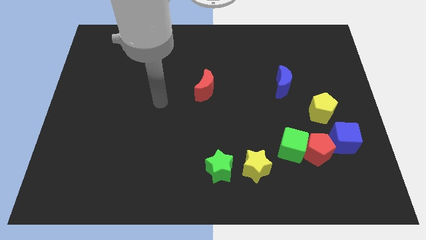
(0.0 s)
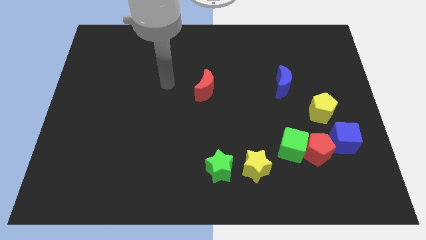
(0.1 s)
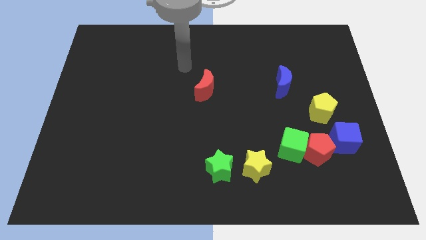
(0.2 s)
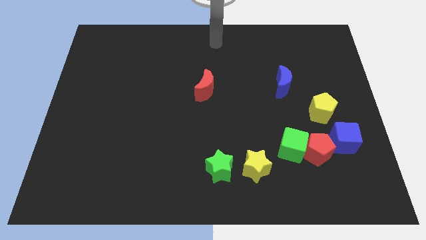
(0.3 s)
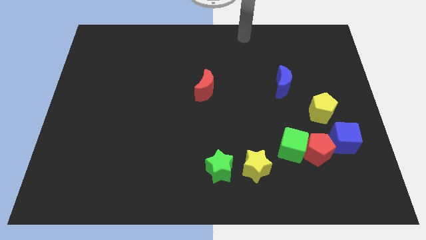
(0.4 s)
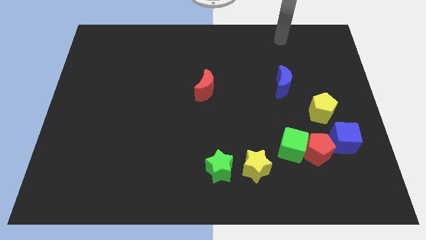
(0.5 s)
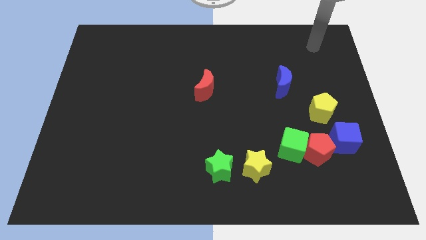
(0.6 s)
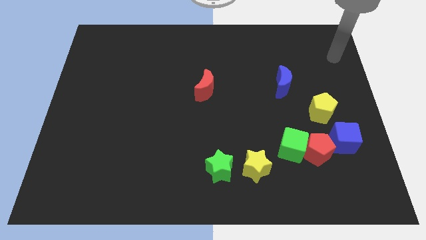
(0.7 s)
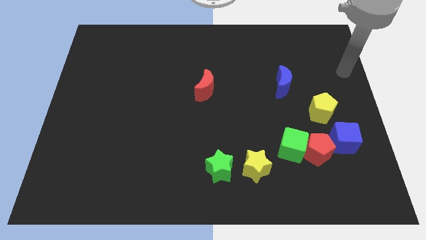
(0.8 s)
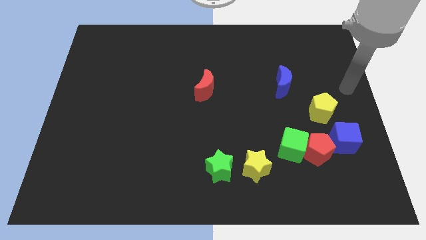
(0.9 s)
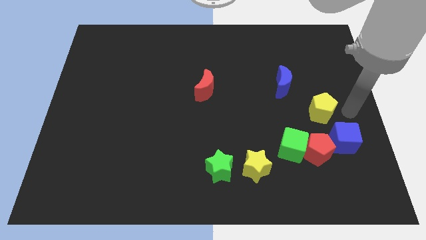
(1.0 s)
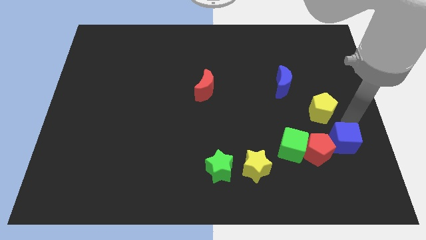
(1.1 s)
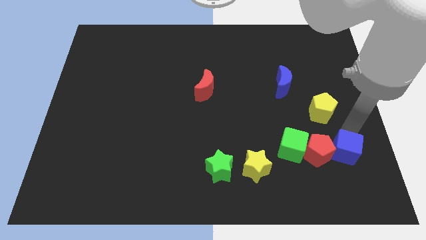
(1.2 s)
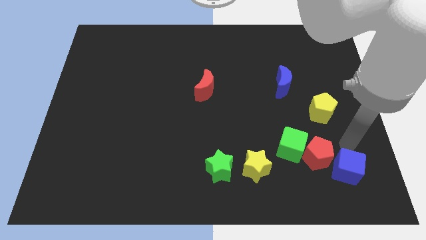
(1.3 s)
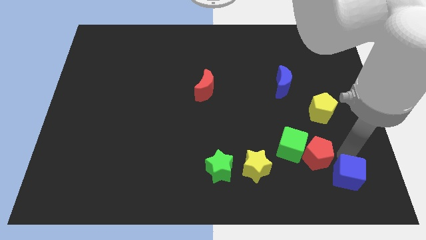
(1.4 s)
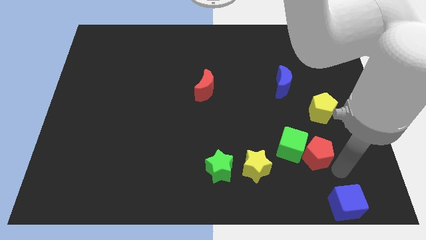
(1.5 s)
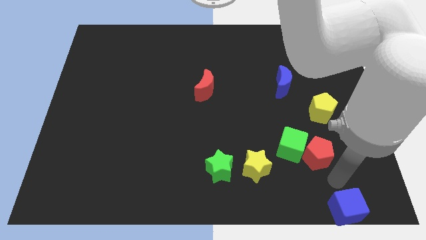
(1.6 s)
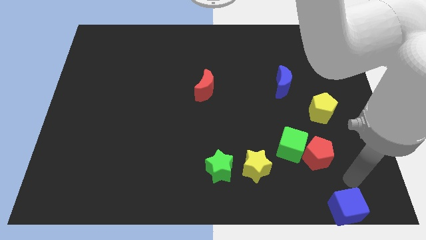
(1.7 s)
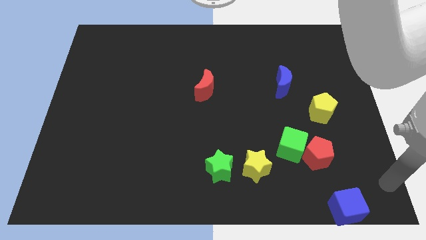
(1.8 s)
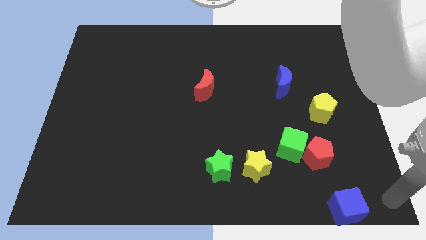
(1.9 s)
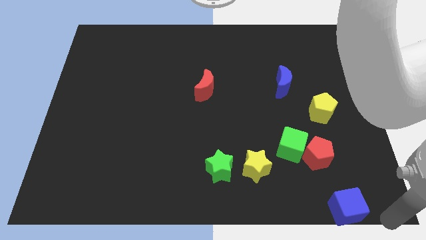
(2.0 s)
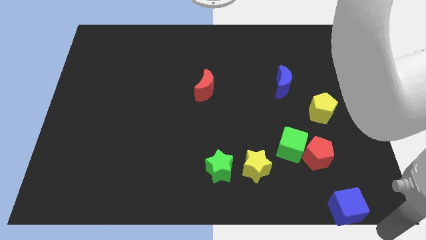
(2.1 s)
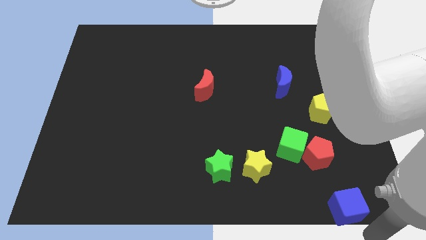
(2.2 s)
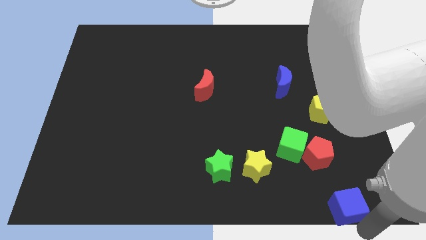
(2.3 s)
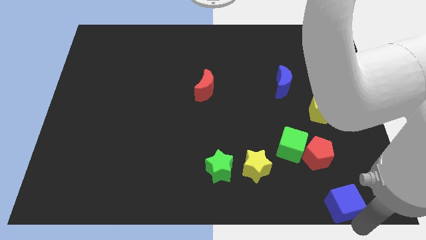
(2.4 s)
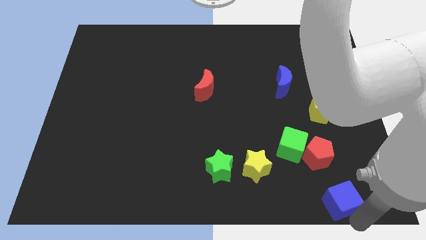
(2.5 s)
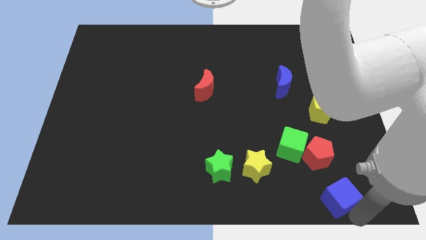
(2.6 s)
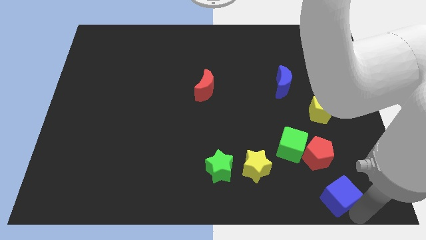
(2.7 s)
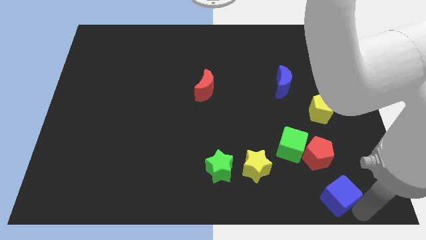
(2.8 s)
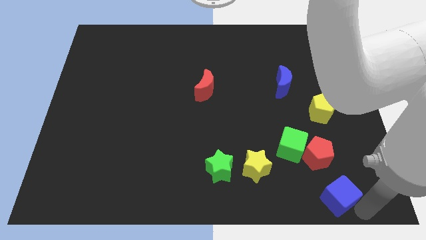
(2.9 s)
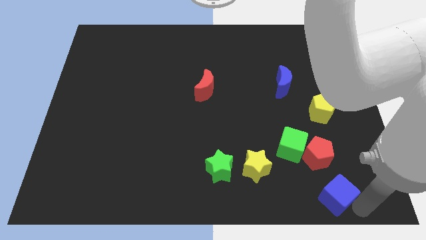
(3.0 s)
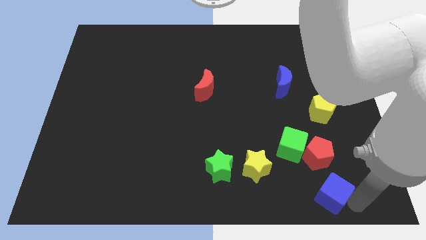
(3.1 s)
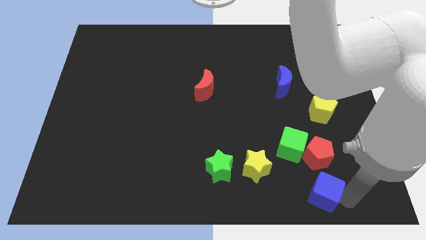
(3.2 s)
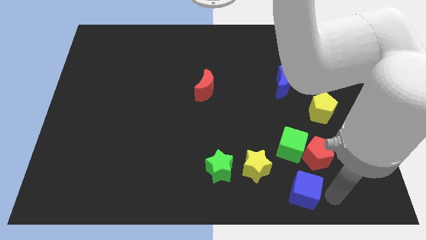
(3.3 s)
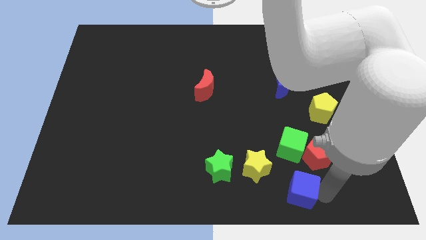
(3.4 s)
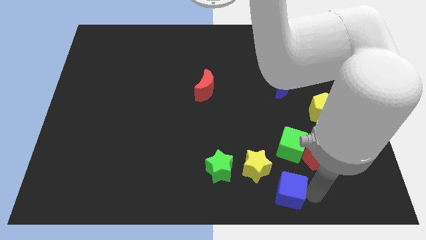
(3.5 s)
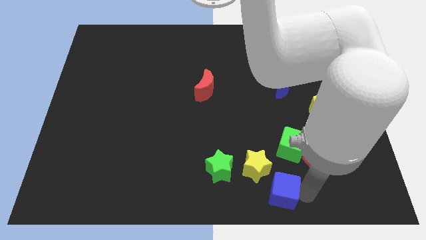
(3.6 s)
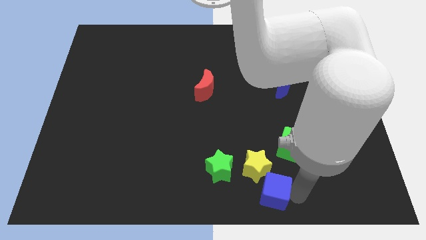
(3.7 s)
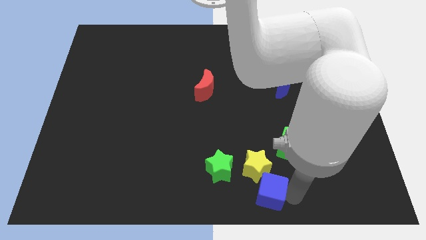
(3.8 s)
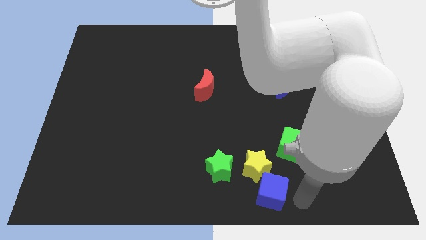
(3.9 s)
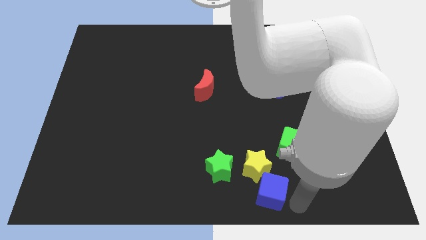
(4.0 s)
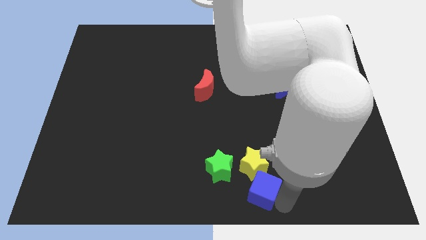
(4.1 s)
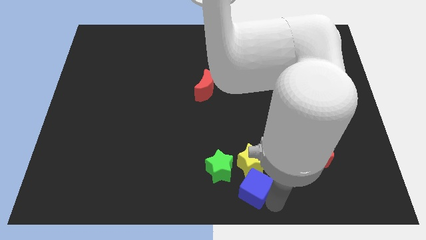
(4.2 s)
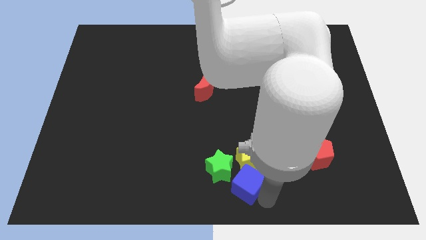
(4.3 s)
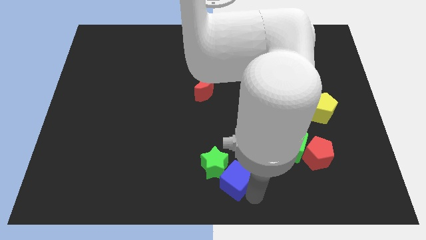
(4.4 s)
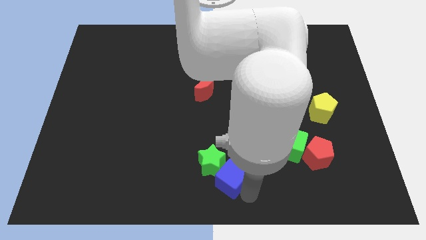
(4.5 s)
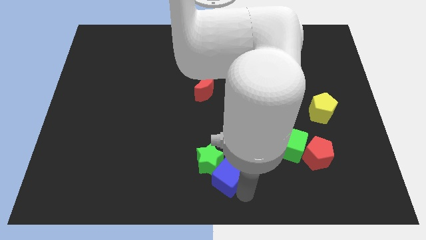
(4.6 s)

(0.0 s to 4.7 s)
slide the blue cube next to the green star

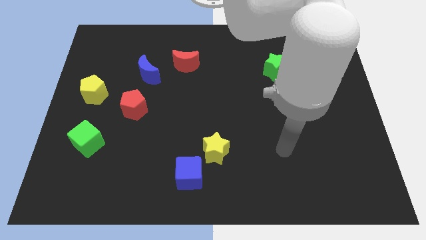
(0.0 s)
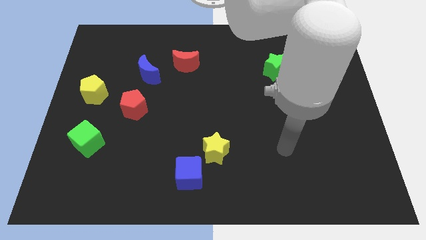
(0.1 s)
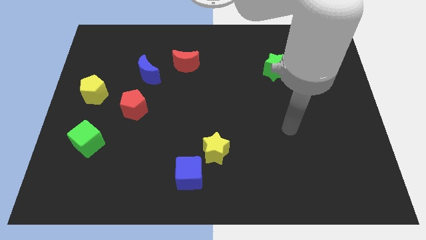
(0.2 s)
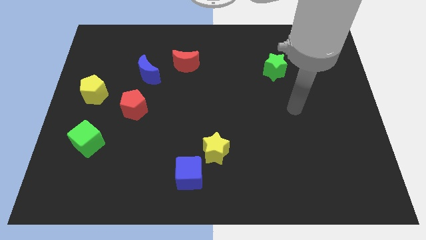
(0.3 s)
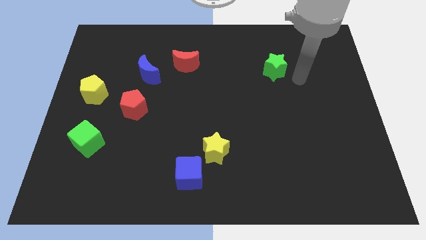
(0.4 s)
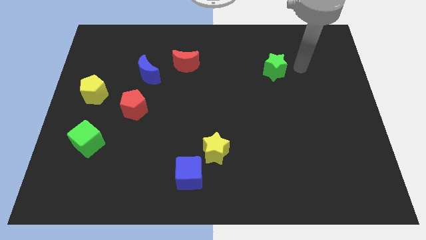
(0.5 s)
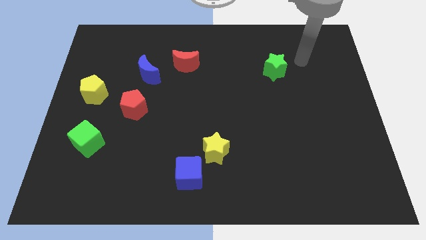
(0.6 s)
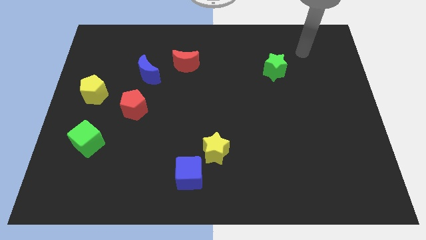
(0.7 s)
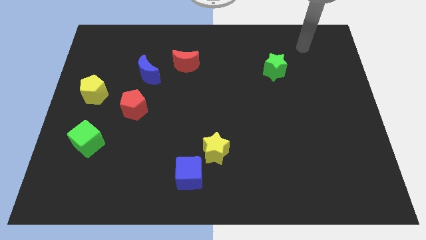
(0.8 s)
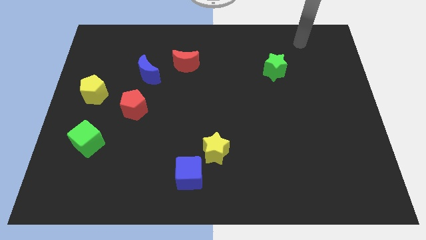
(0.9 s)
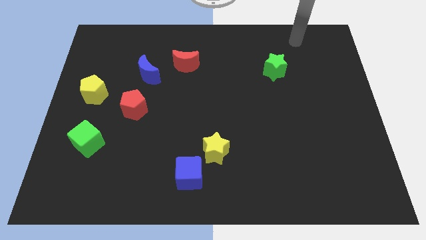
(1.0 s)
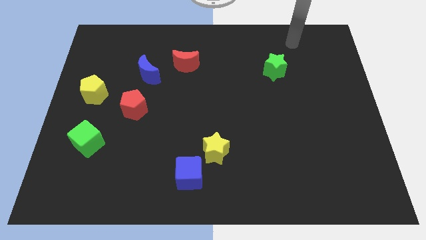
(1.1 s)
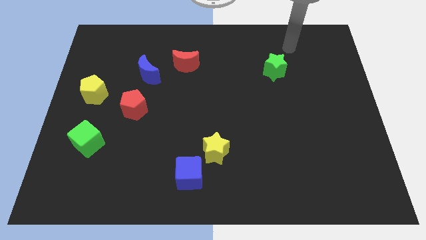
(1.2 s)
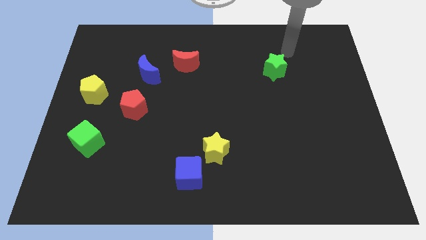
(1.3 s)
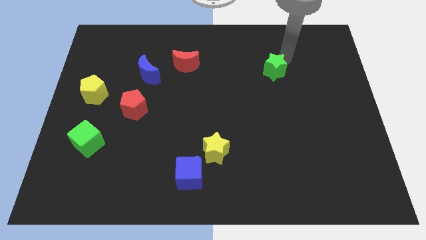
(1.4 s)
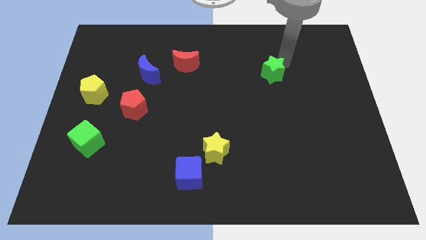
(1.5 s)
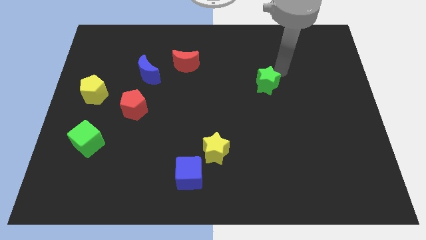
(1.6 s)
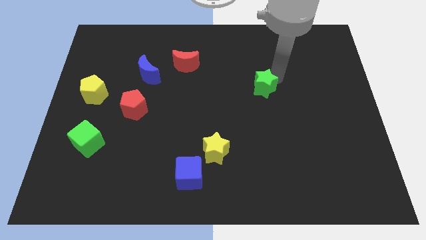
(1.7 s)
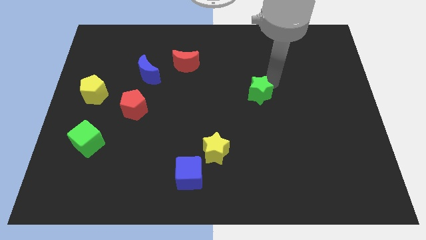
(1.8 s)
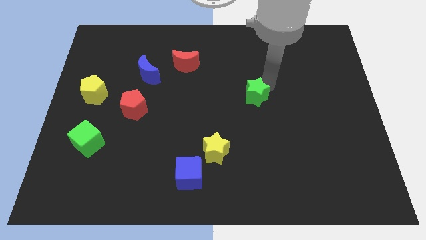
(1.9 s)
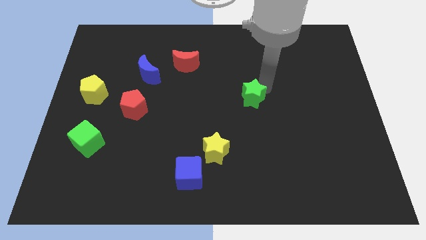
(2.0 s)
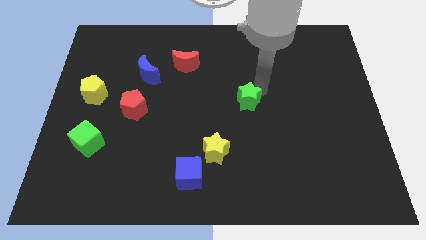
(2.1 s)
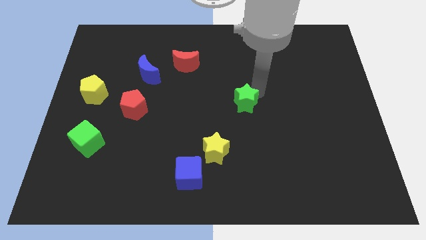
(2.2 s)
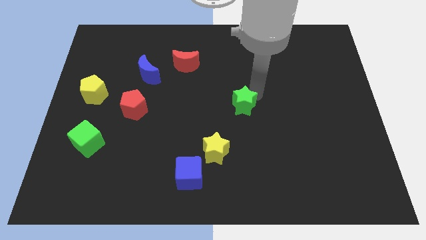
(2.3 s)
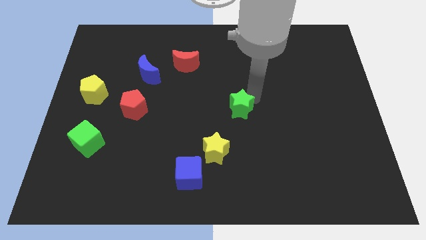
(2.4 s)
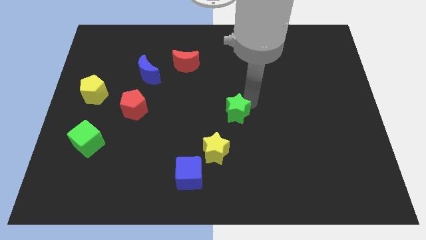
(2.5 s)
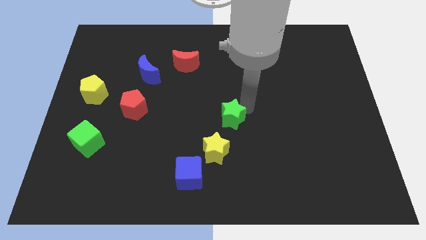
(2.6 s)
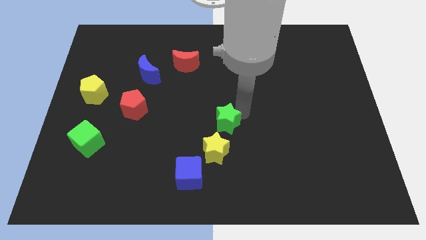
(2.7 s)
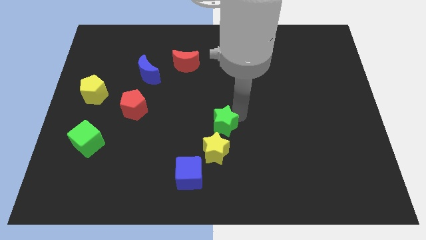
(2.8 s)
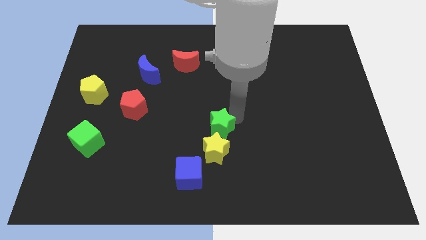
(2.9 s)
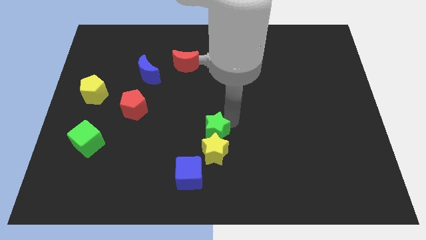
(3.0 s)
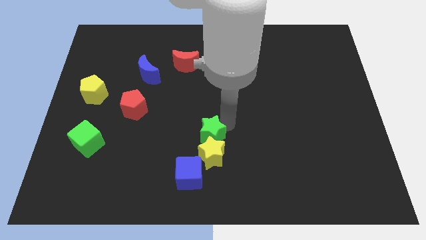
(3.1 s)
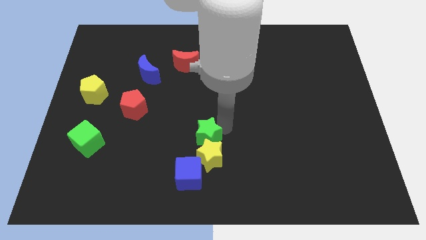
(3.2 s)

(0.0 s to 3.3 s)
move the green star towards the yellow star

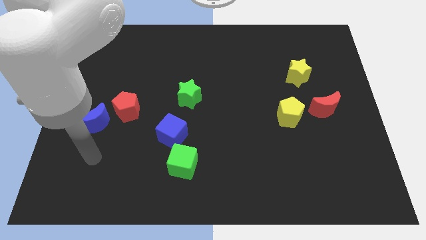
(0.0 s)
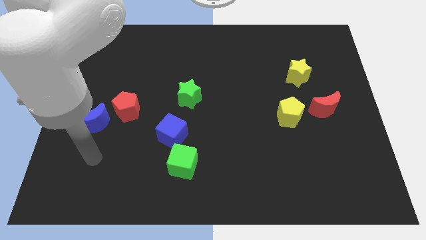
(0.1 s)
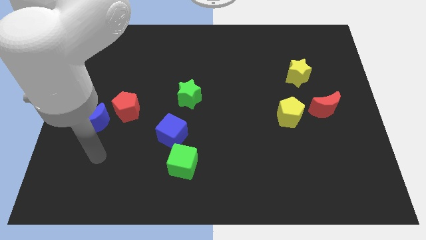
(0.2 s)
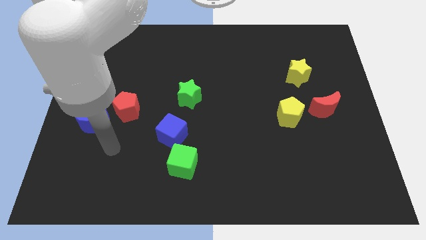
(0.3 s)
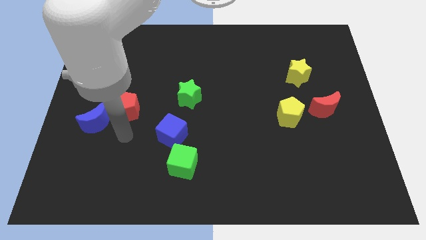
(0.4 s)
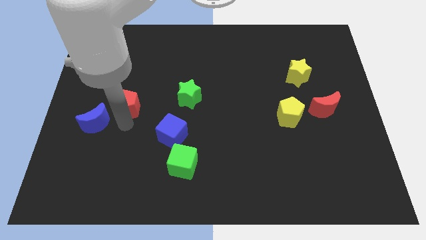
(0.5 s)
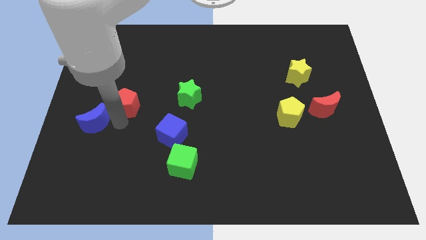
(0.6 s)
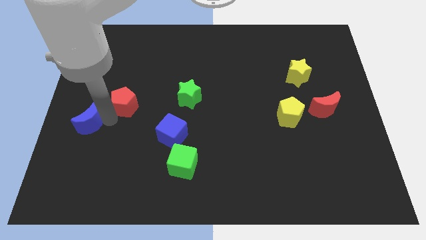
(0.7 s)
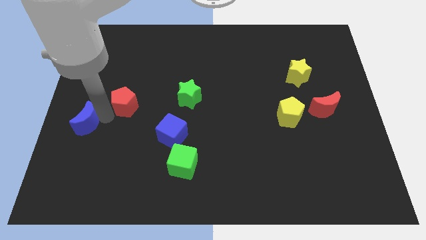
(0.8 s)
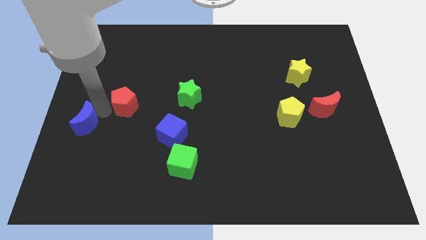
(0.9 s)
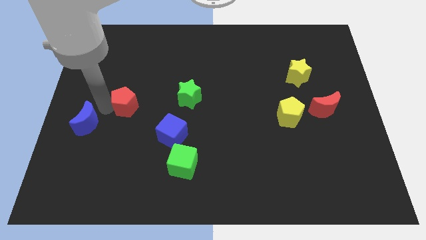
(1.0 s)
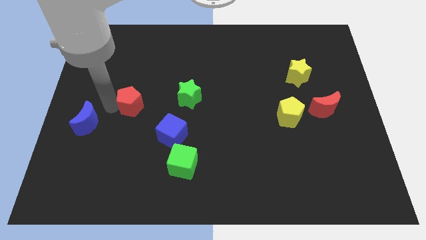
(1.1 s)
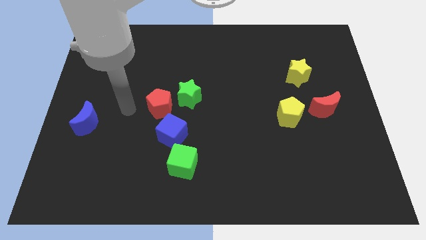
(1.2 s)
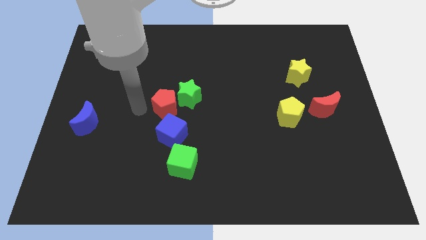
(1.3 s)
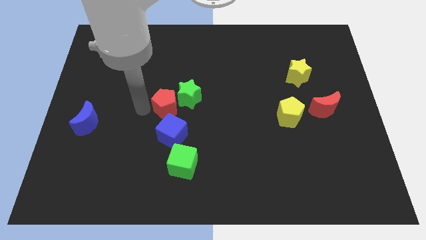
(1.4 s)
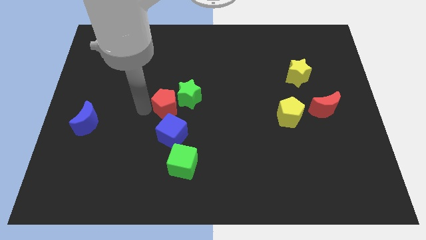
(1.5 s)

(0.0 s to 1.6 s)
push the red pentagon next to the green star
